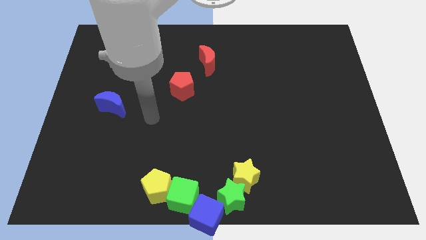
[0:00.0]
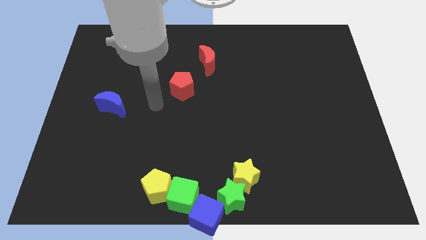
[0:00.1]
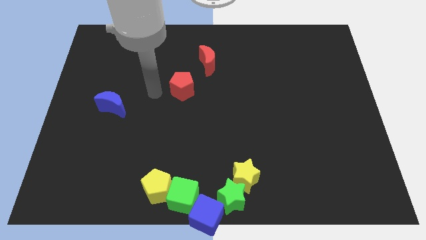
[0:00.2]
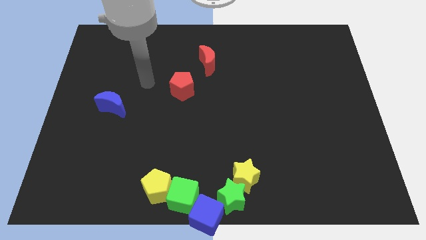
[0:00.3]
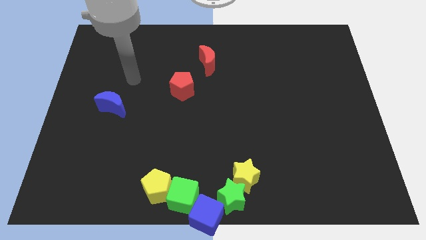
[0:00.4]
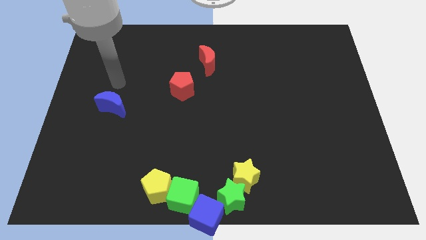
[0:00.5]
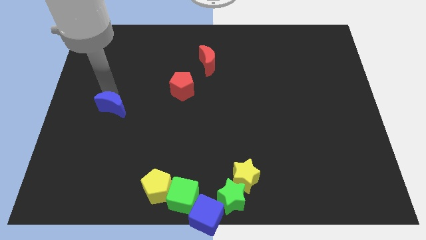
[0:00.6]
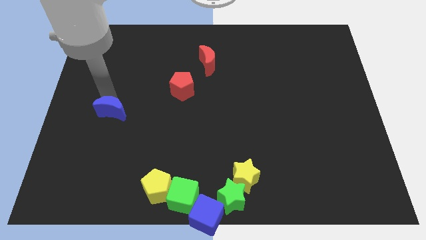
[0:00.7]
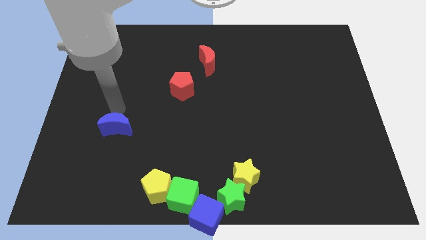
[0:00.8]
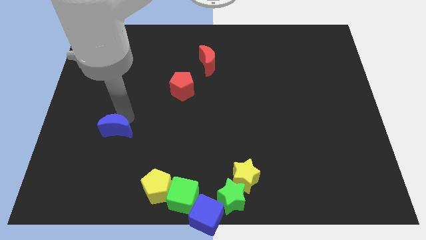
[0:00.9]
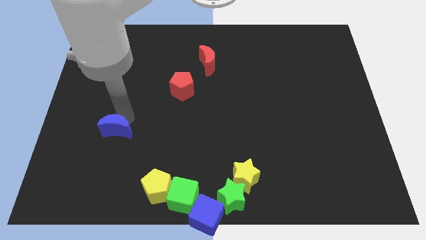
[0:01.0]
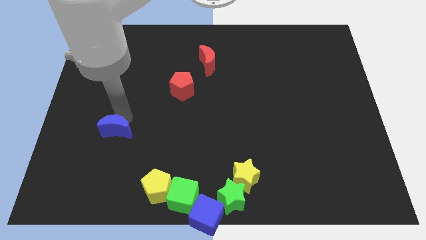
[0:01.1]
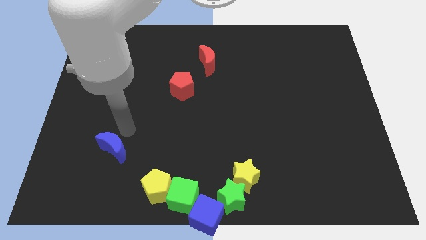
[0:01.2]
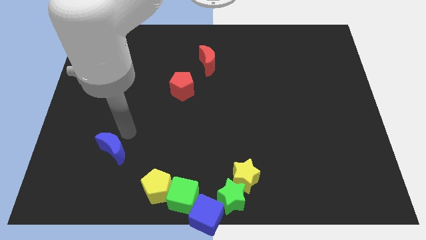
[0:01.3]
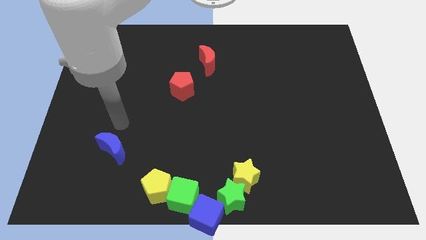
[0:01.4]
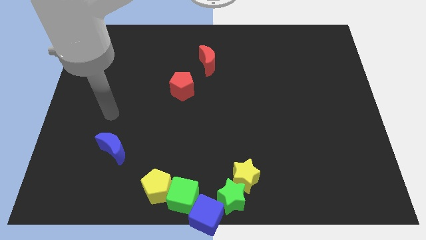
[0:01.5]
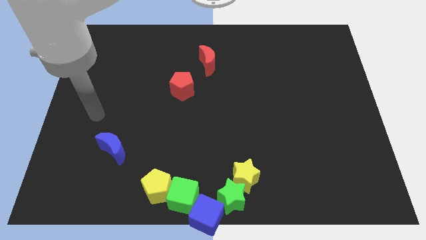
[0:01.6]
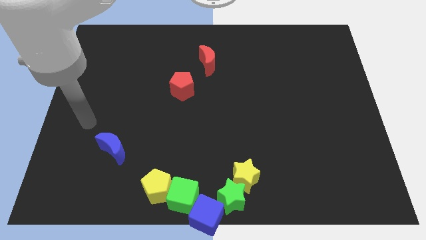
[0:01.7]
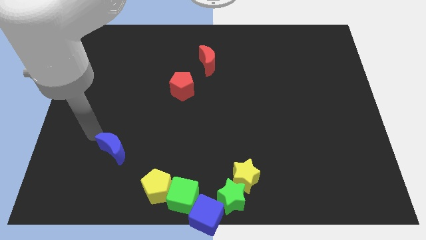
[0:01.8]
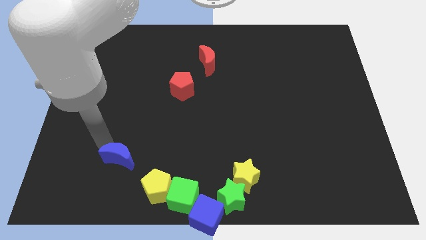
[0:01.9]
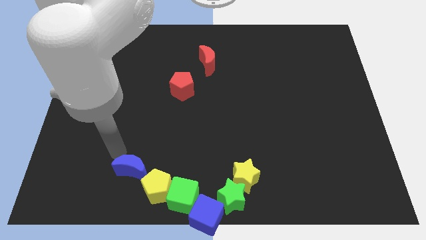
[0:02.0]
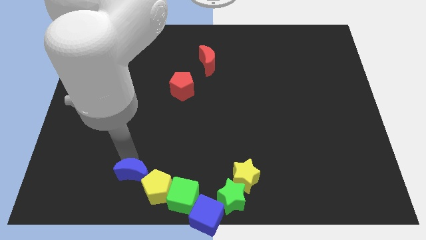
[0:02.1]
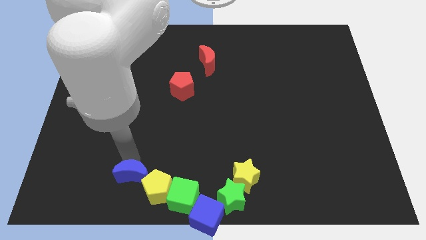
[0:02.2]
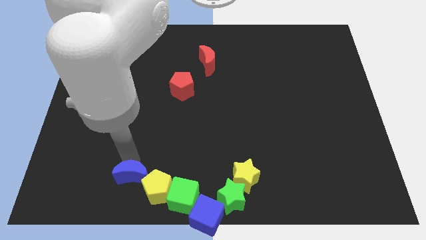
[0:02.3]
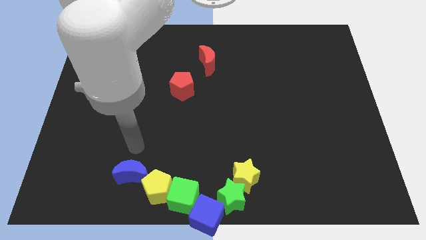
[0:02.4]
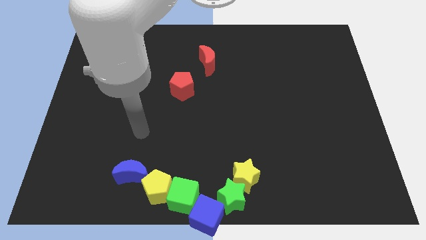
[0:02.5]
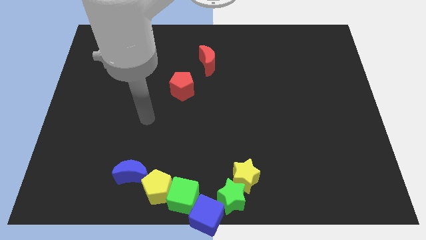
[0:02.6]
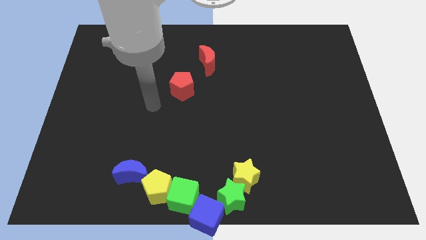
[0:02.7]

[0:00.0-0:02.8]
place blue crescent towards top left of the yellow pentagon

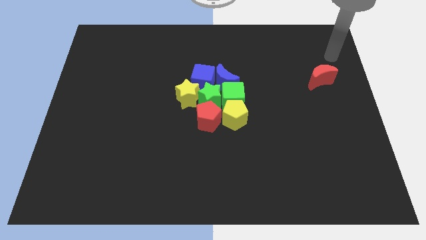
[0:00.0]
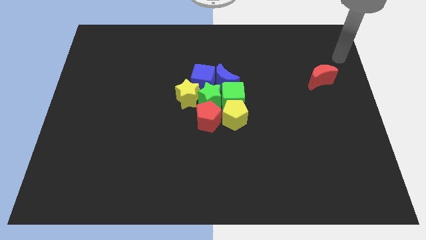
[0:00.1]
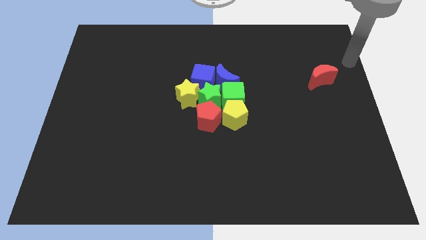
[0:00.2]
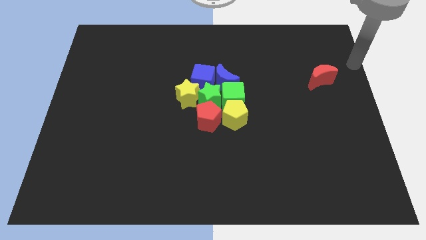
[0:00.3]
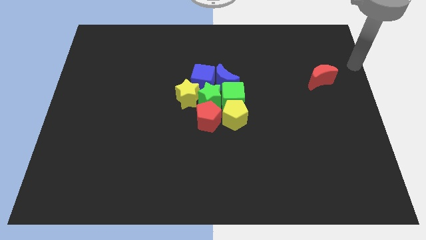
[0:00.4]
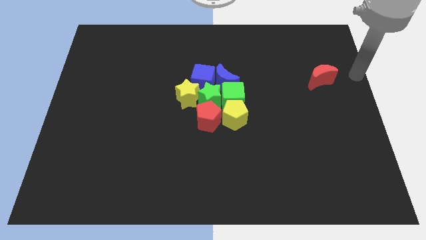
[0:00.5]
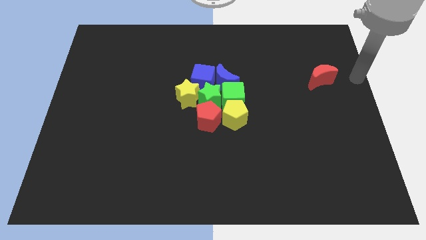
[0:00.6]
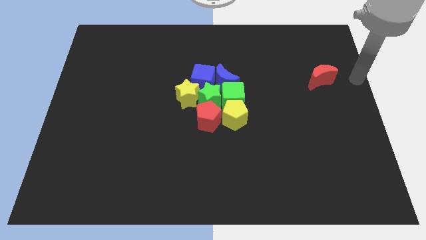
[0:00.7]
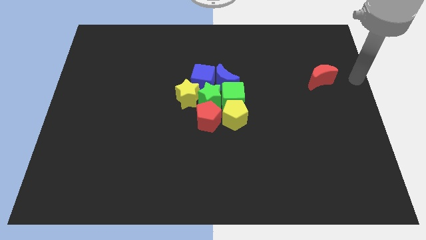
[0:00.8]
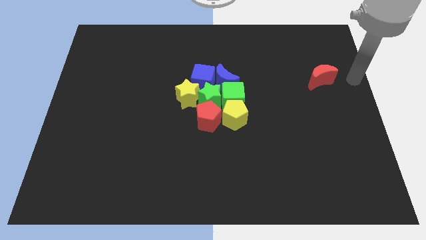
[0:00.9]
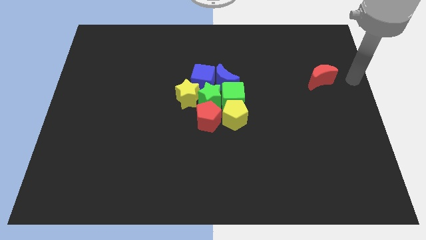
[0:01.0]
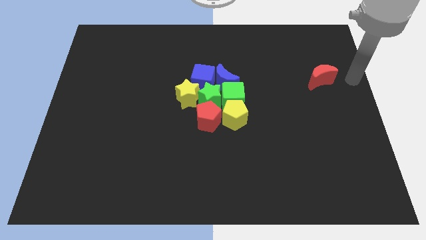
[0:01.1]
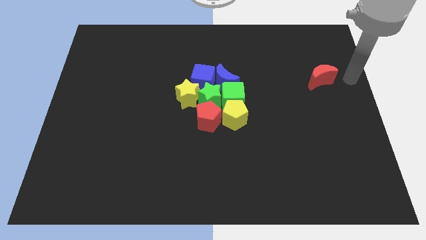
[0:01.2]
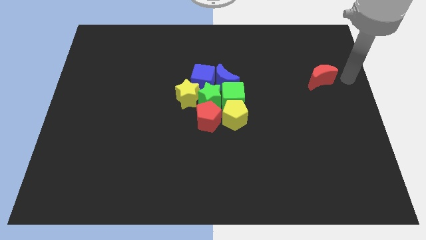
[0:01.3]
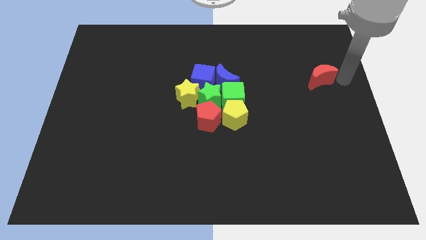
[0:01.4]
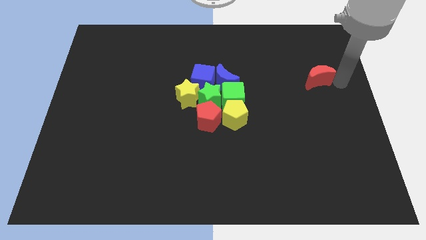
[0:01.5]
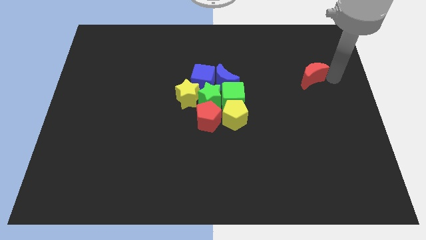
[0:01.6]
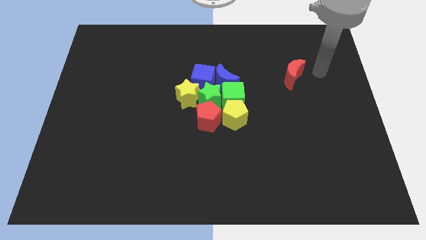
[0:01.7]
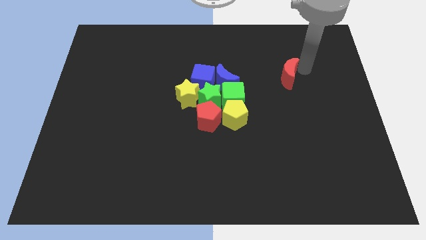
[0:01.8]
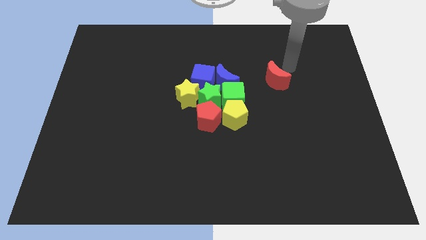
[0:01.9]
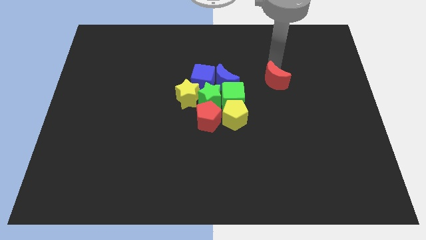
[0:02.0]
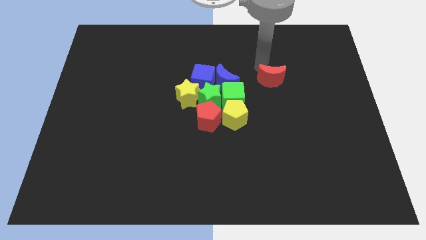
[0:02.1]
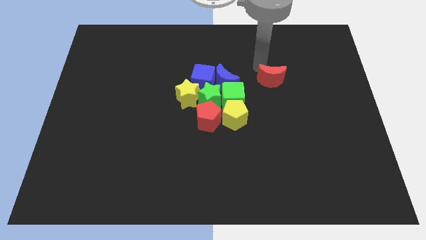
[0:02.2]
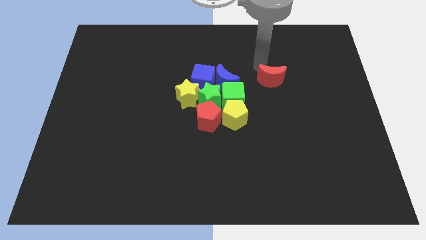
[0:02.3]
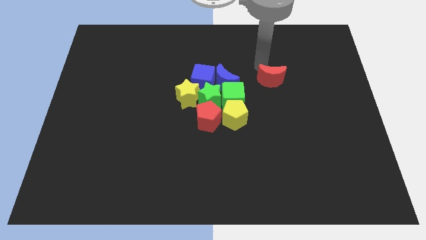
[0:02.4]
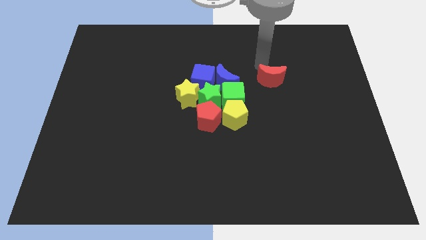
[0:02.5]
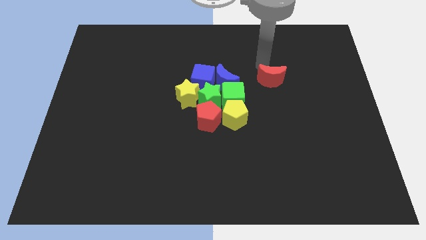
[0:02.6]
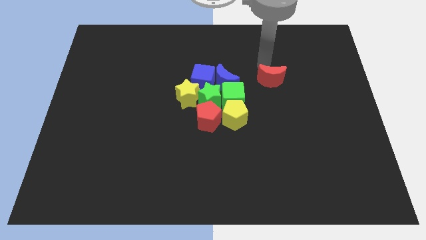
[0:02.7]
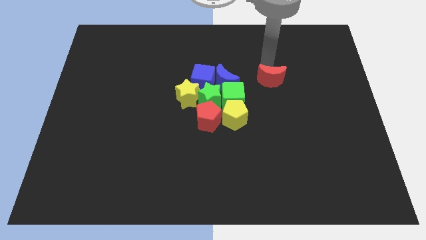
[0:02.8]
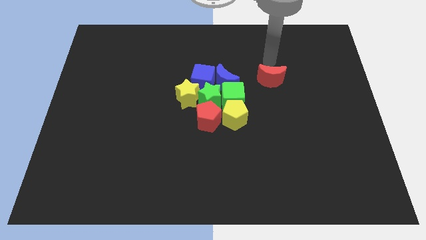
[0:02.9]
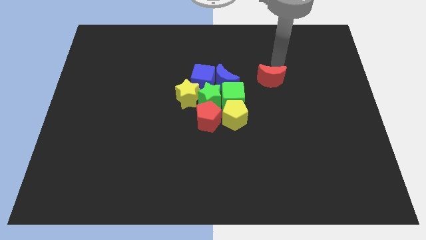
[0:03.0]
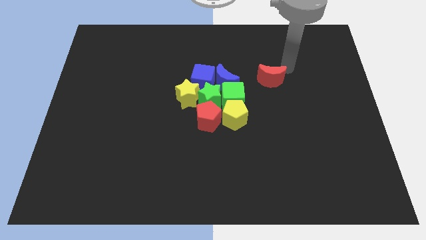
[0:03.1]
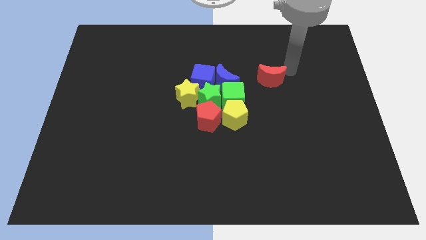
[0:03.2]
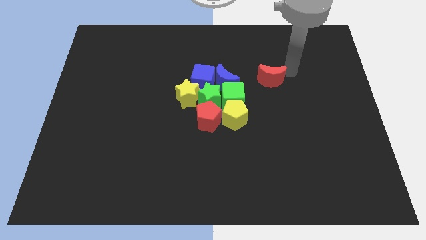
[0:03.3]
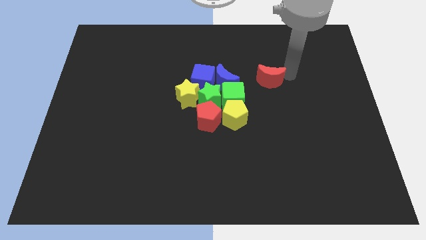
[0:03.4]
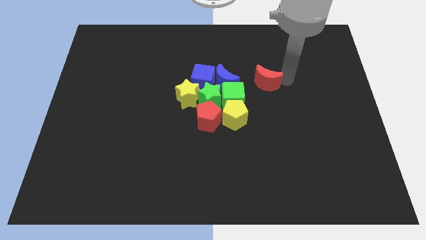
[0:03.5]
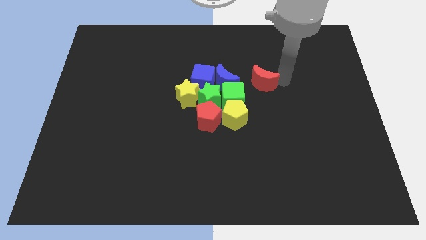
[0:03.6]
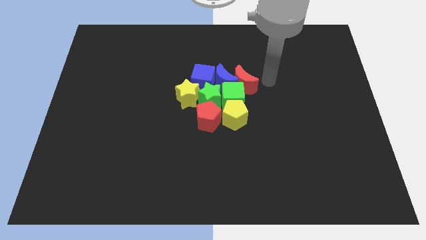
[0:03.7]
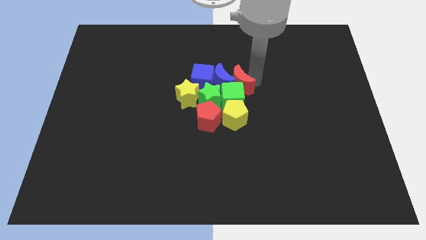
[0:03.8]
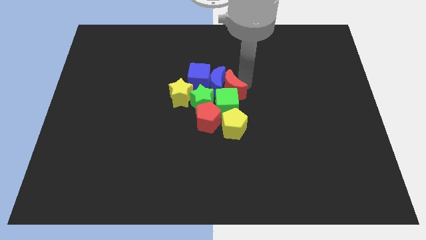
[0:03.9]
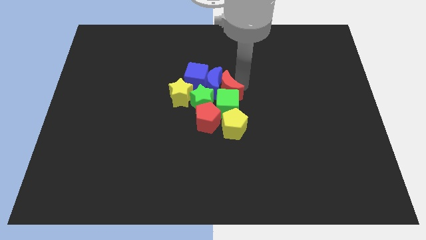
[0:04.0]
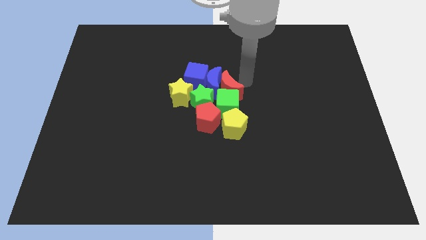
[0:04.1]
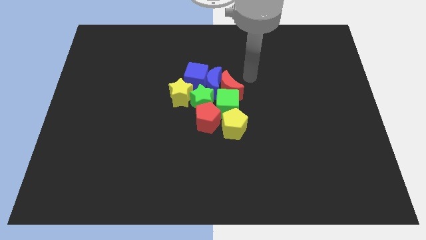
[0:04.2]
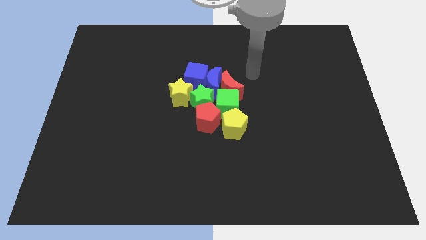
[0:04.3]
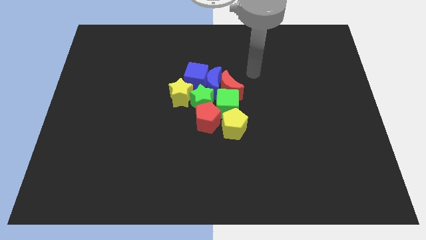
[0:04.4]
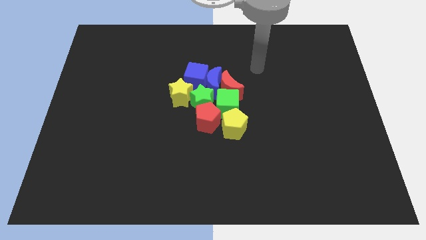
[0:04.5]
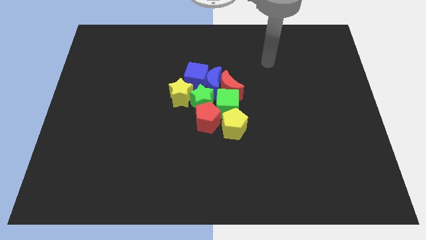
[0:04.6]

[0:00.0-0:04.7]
push the red crescent into the blue crescent

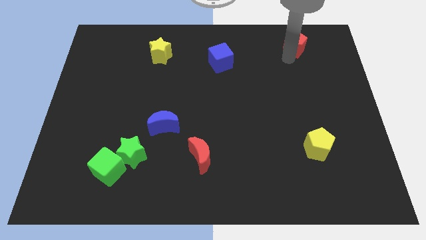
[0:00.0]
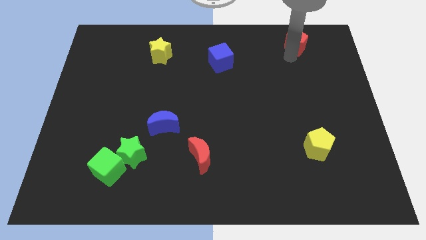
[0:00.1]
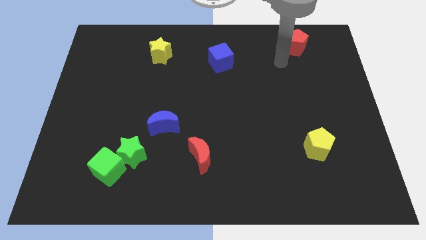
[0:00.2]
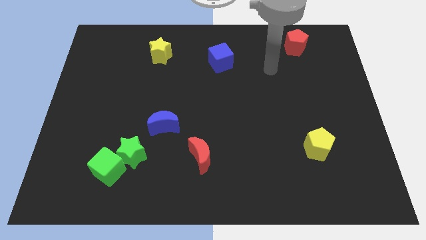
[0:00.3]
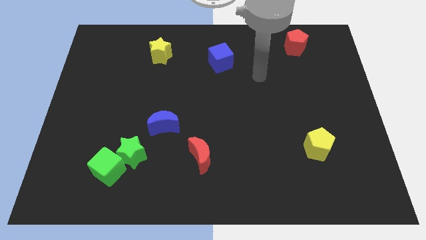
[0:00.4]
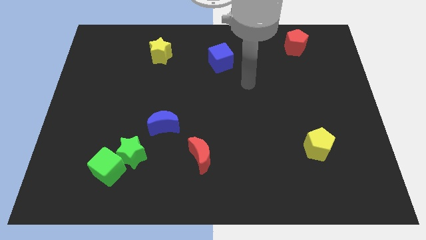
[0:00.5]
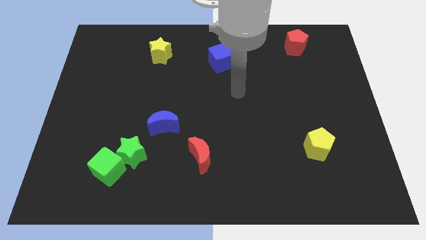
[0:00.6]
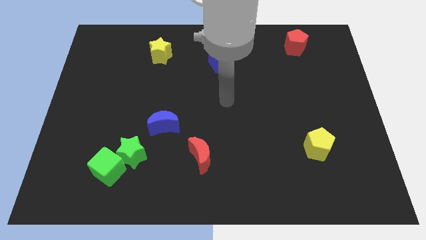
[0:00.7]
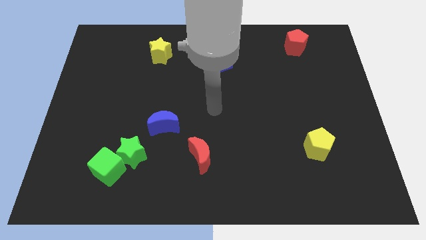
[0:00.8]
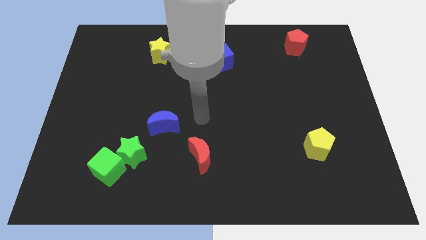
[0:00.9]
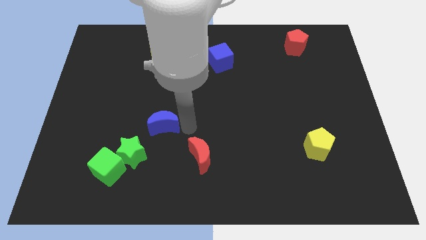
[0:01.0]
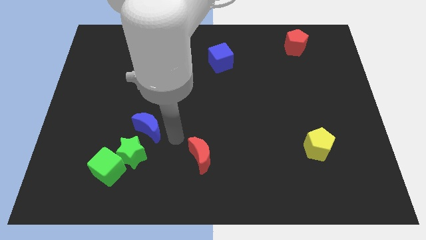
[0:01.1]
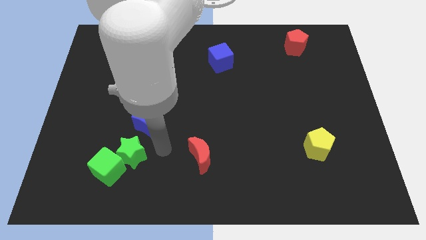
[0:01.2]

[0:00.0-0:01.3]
move your arm towards the green blocks
